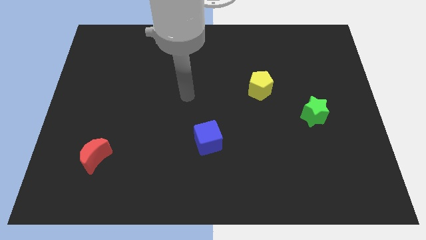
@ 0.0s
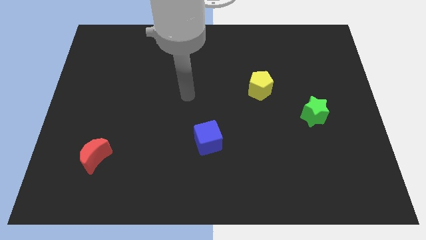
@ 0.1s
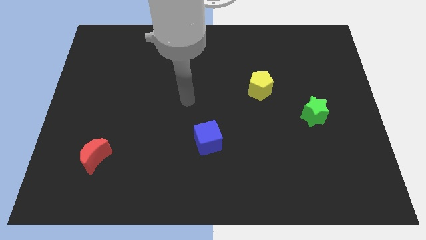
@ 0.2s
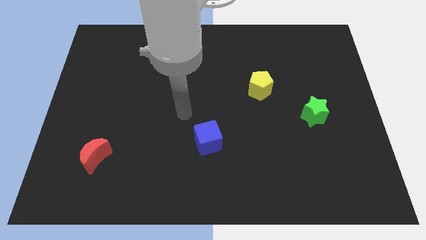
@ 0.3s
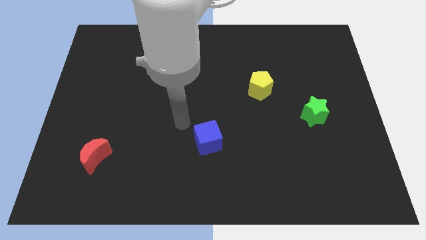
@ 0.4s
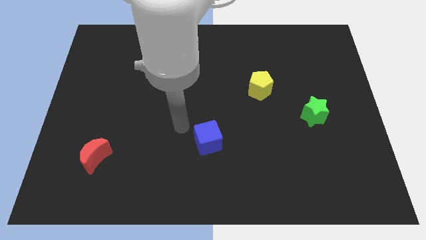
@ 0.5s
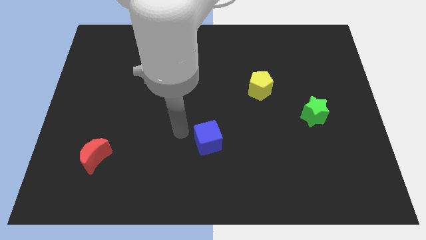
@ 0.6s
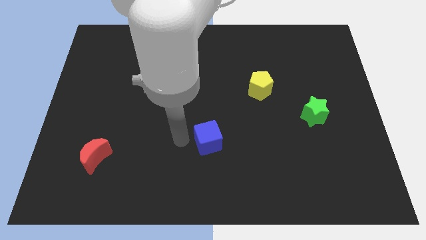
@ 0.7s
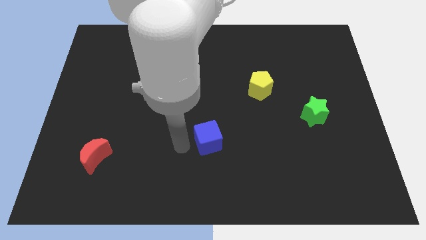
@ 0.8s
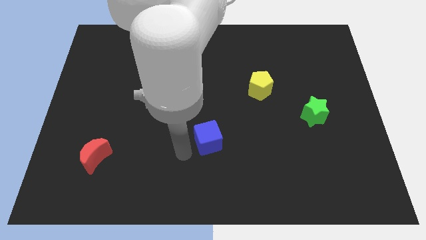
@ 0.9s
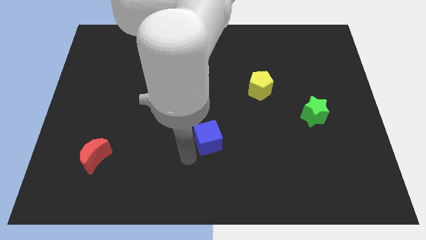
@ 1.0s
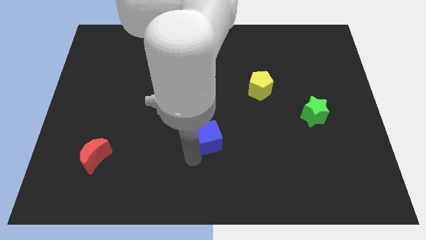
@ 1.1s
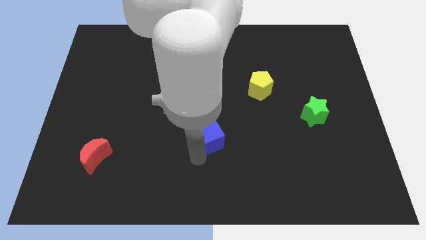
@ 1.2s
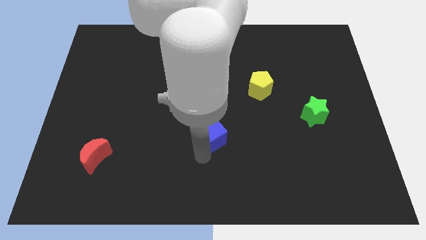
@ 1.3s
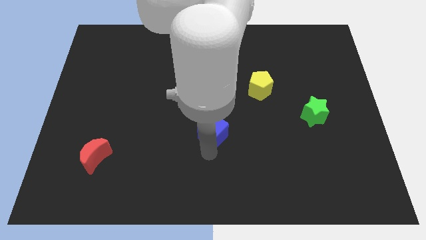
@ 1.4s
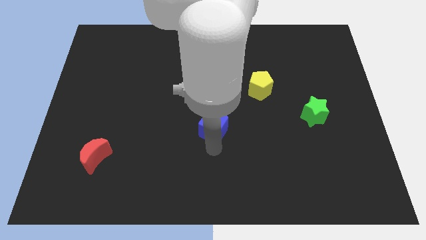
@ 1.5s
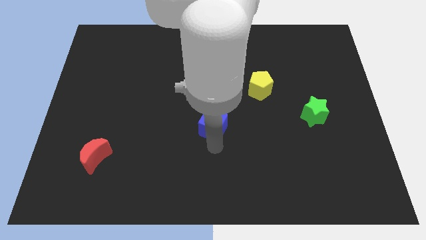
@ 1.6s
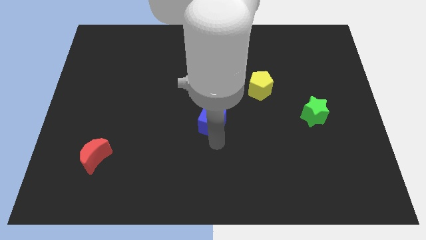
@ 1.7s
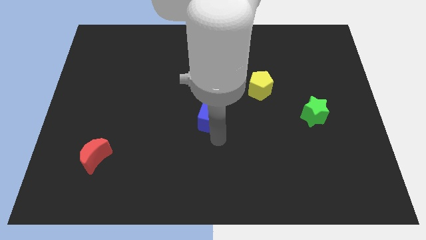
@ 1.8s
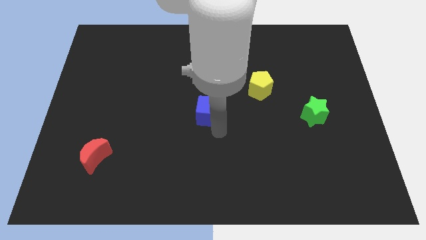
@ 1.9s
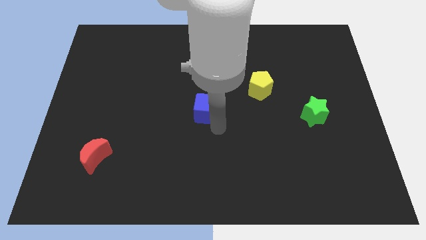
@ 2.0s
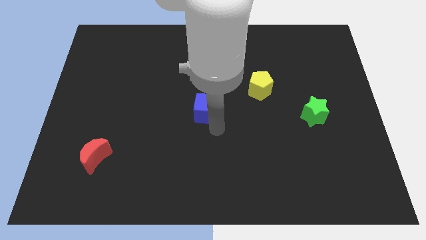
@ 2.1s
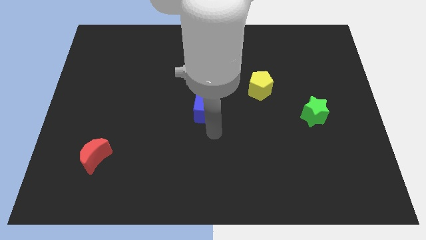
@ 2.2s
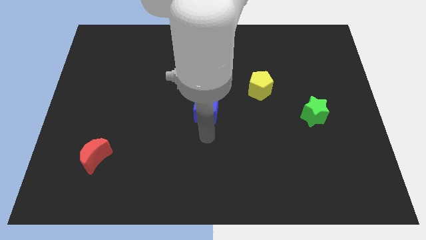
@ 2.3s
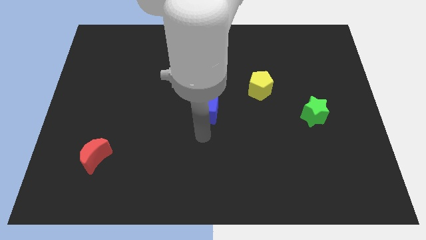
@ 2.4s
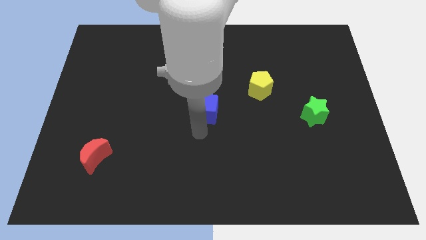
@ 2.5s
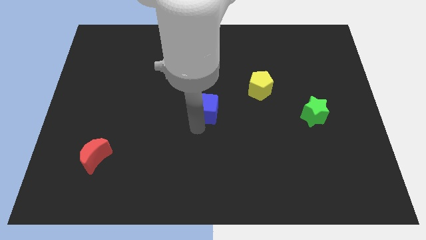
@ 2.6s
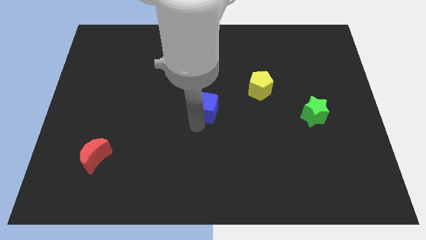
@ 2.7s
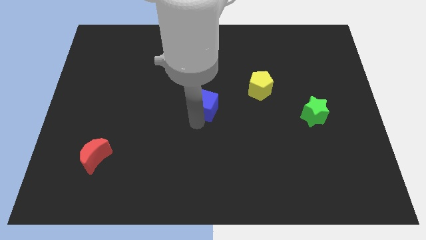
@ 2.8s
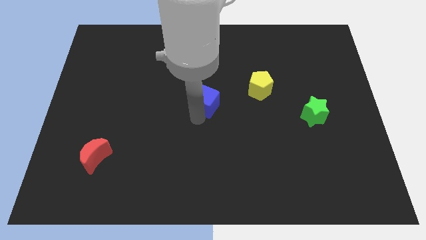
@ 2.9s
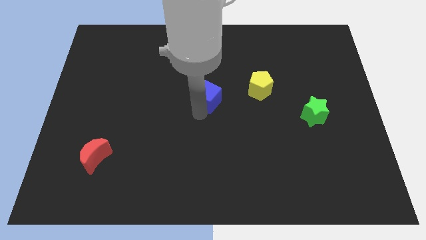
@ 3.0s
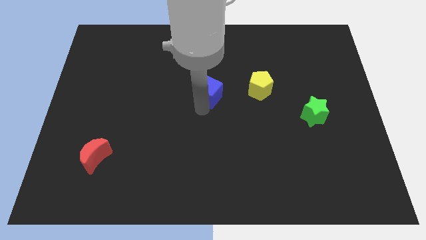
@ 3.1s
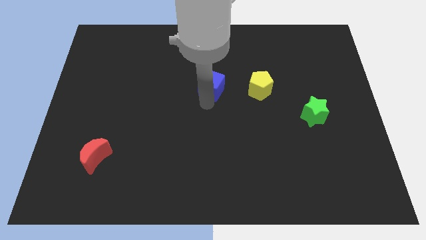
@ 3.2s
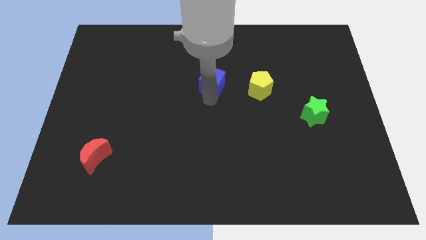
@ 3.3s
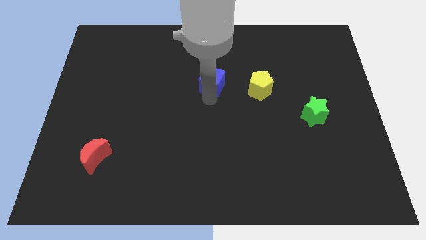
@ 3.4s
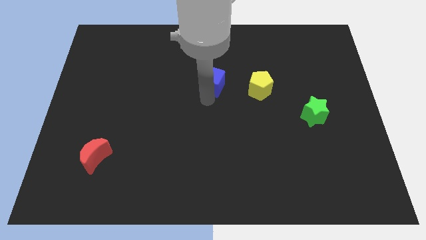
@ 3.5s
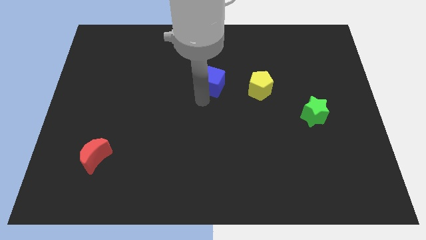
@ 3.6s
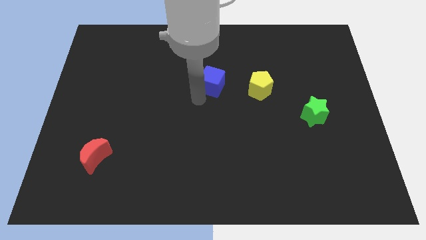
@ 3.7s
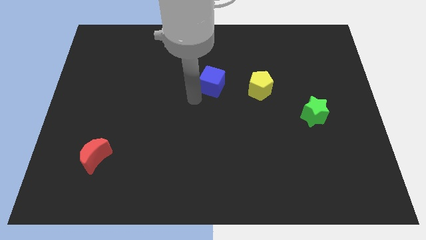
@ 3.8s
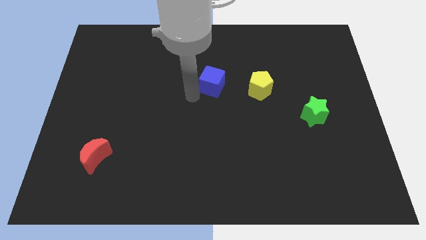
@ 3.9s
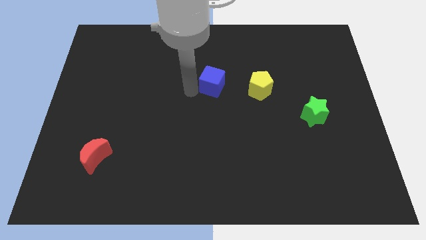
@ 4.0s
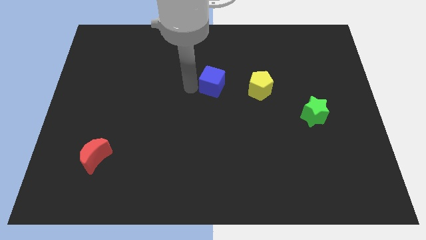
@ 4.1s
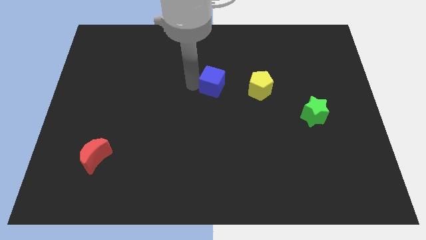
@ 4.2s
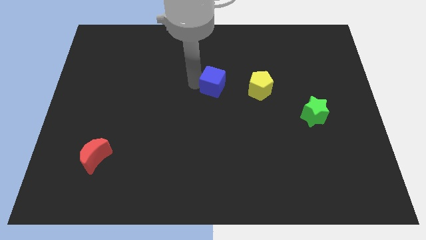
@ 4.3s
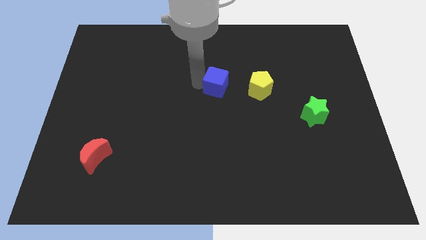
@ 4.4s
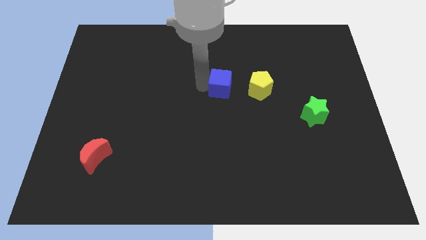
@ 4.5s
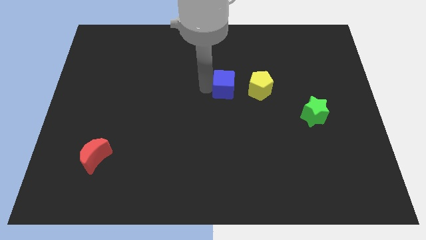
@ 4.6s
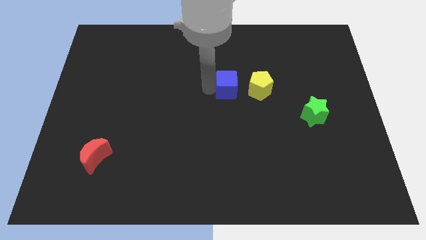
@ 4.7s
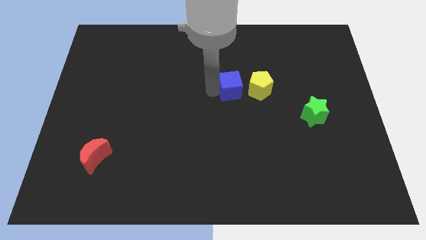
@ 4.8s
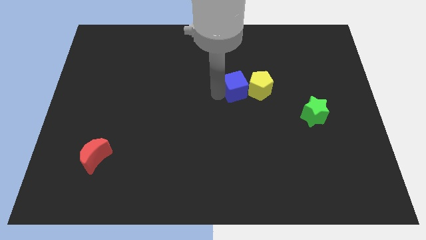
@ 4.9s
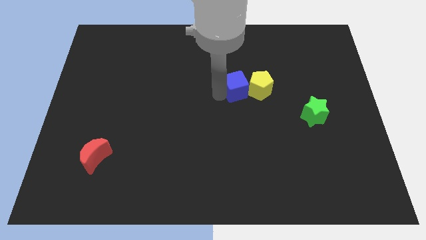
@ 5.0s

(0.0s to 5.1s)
put the blue block towards the yellow pentagon

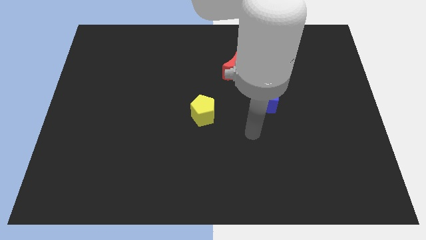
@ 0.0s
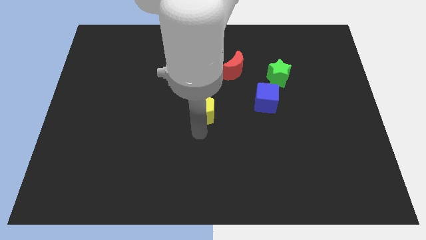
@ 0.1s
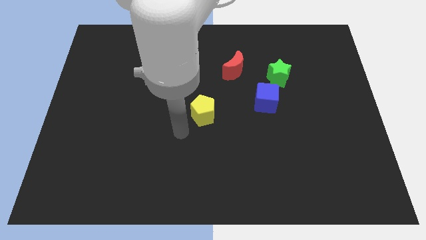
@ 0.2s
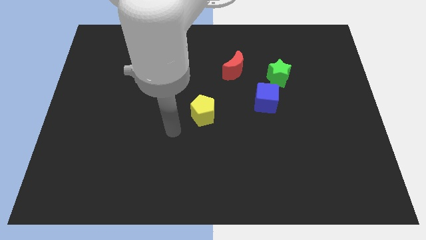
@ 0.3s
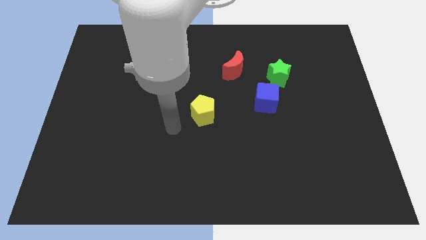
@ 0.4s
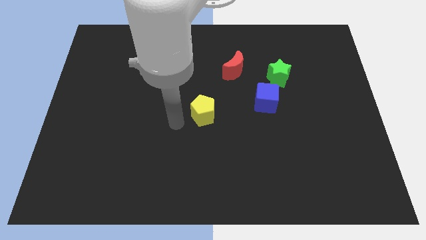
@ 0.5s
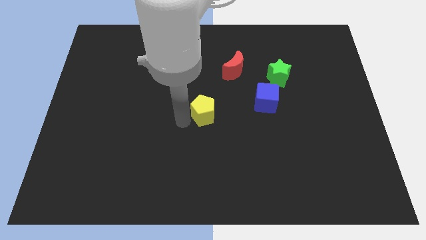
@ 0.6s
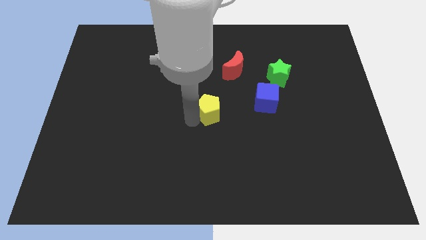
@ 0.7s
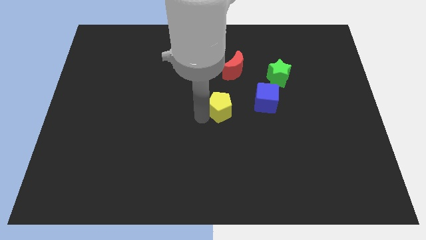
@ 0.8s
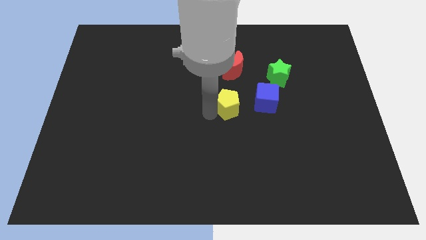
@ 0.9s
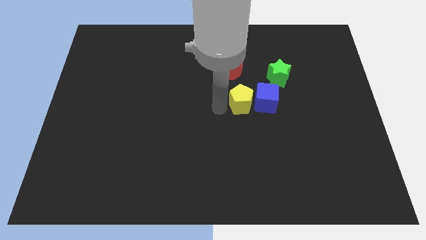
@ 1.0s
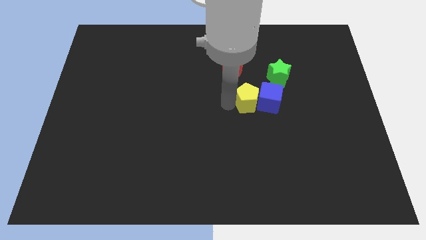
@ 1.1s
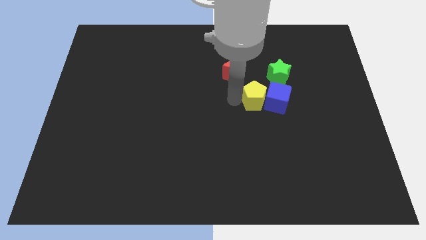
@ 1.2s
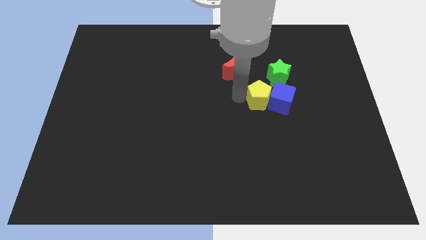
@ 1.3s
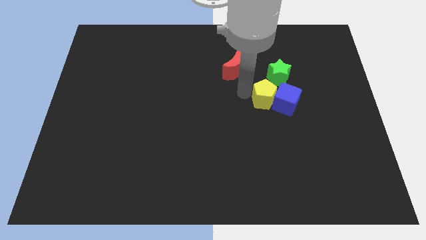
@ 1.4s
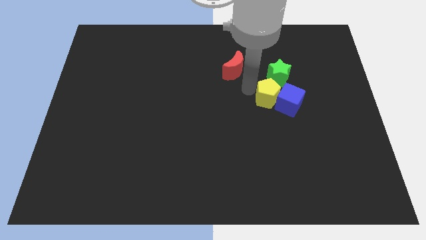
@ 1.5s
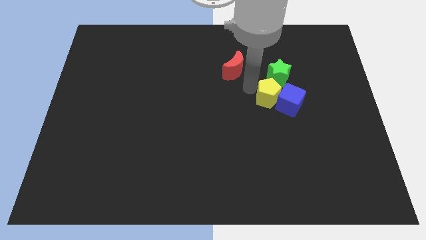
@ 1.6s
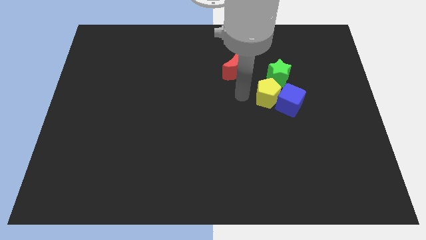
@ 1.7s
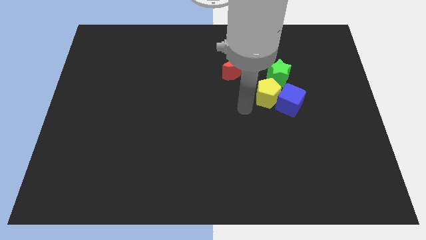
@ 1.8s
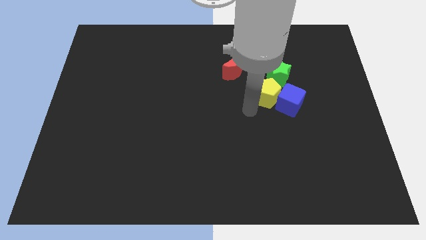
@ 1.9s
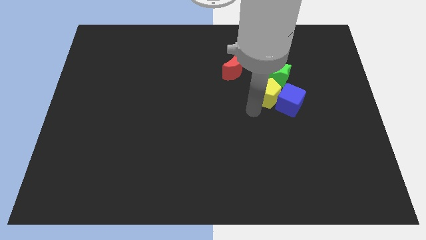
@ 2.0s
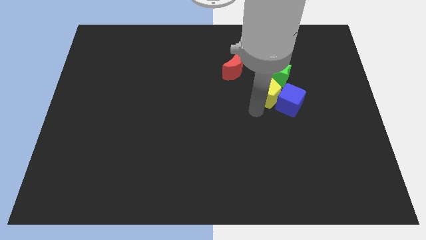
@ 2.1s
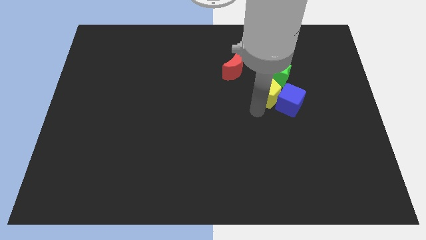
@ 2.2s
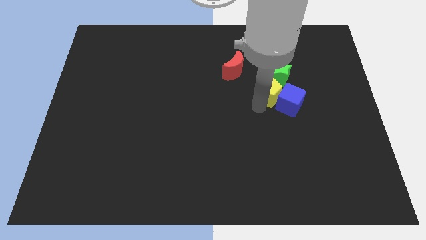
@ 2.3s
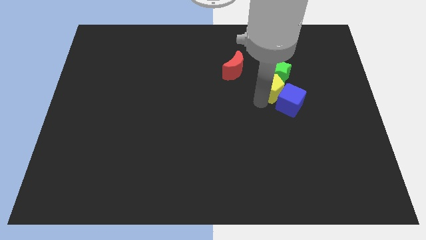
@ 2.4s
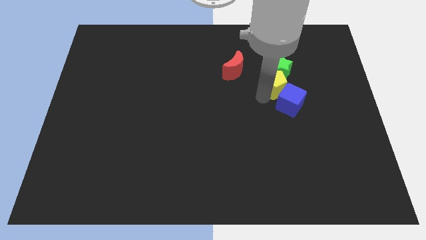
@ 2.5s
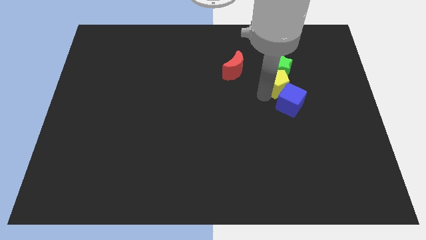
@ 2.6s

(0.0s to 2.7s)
slide the pentagon close to the star

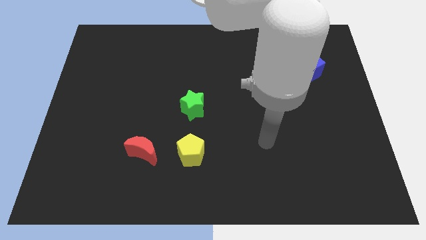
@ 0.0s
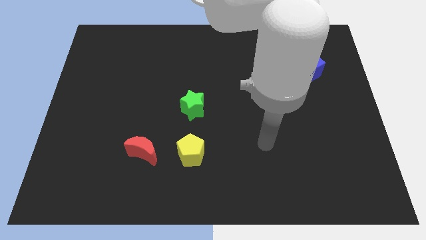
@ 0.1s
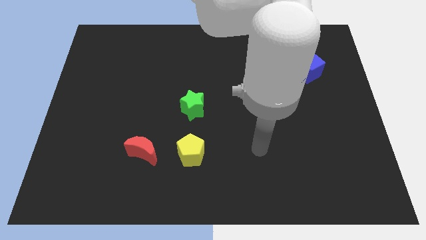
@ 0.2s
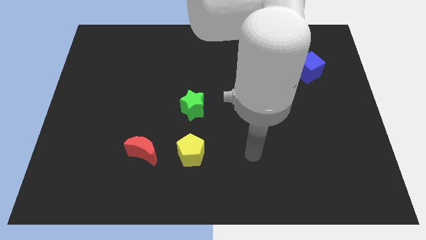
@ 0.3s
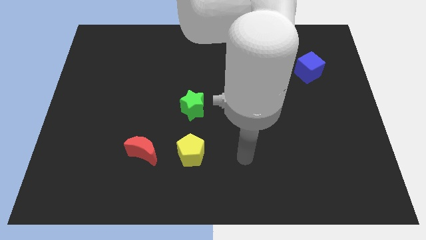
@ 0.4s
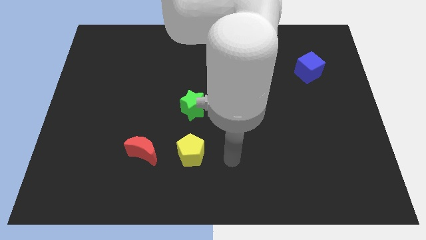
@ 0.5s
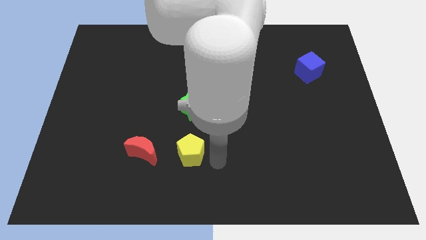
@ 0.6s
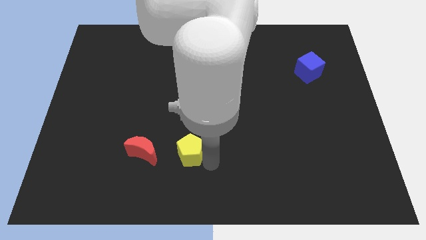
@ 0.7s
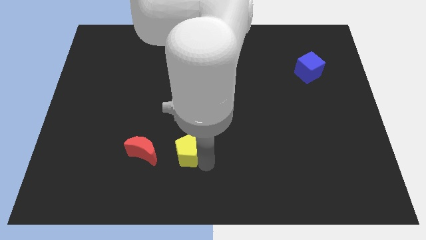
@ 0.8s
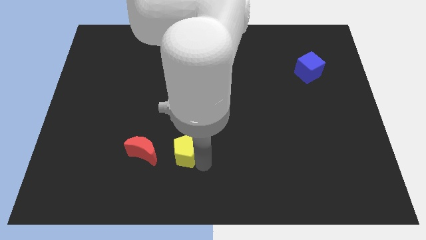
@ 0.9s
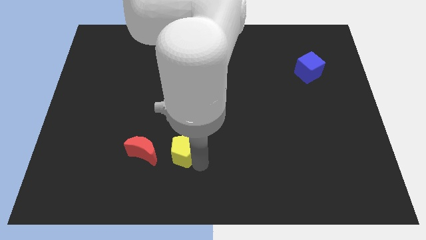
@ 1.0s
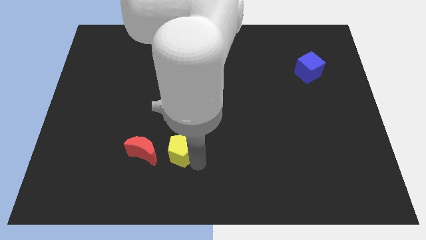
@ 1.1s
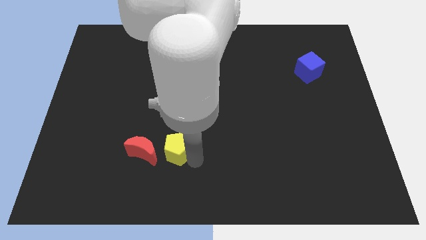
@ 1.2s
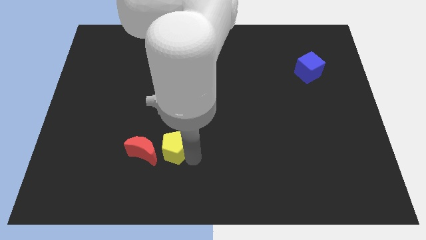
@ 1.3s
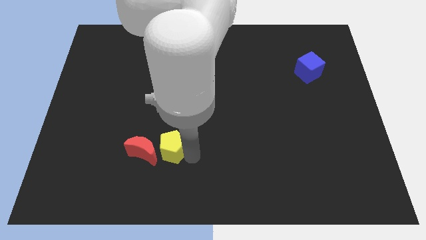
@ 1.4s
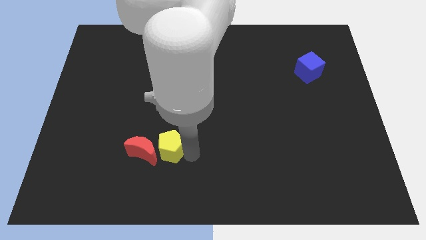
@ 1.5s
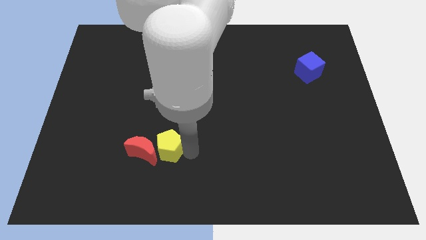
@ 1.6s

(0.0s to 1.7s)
push the yellow block next to the moon
